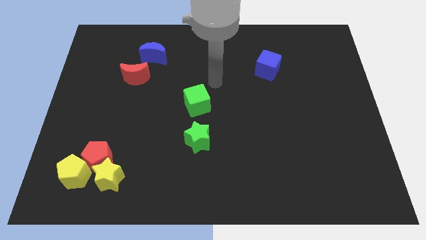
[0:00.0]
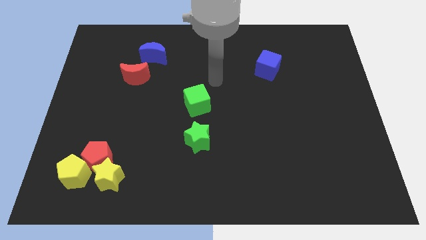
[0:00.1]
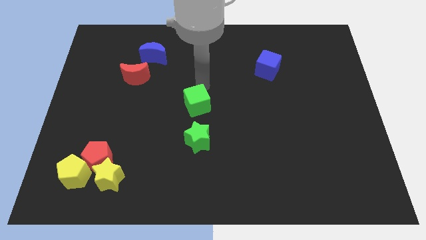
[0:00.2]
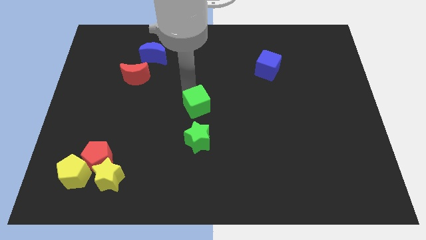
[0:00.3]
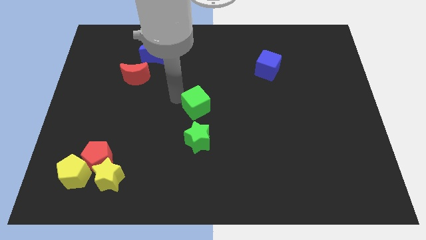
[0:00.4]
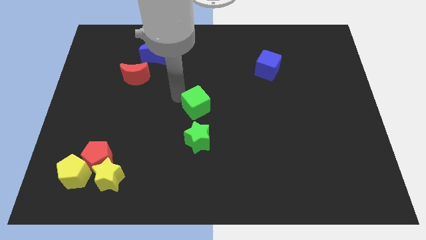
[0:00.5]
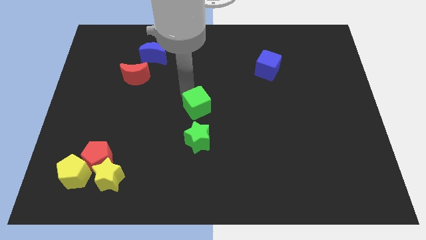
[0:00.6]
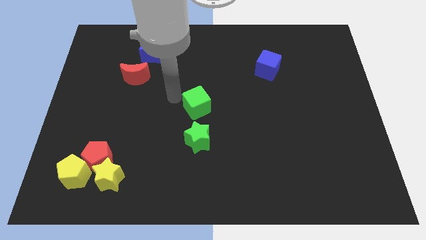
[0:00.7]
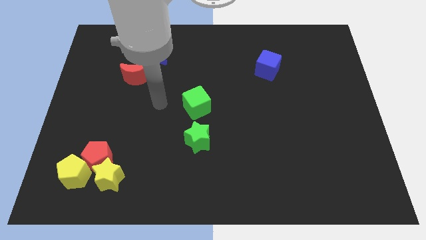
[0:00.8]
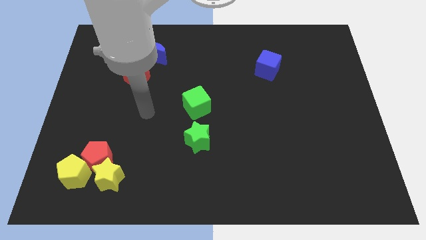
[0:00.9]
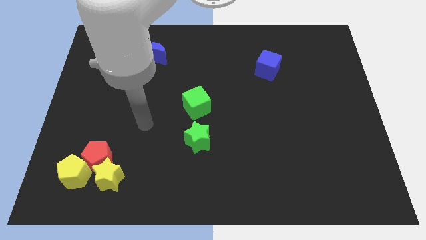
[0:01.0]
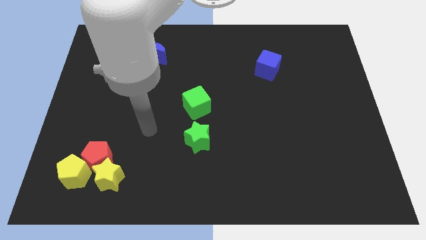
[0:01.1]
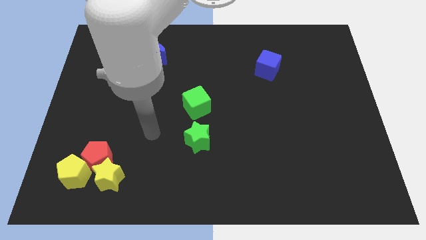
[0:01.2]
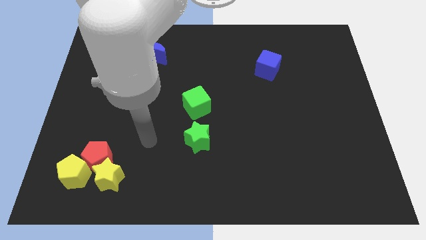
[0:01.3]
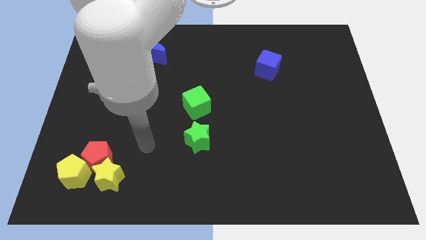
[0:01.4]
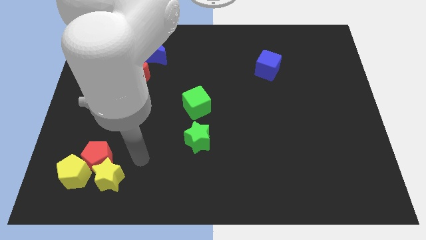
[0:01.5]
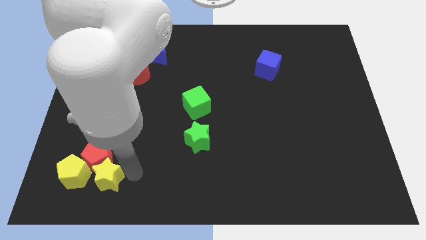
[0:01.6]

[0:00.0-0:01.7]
push the green cube downwards slightly

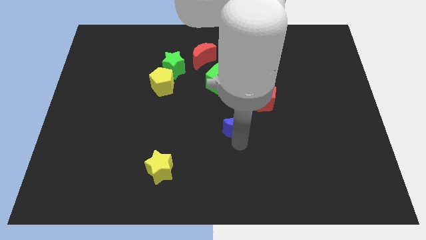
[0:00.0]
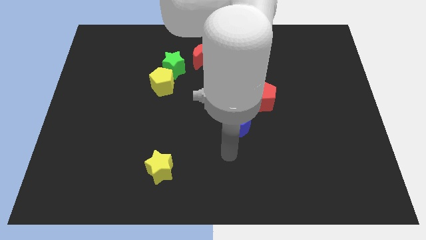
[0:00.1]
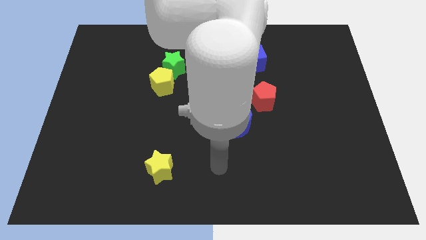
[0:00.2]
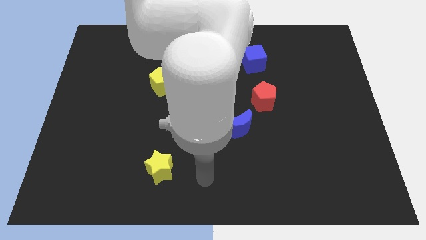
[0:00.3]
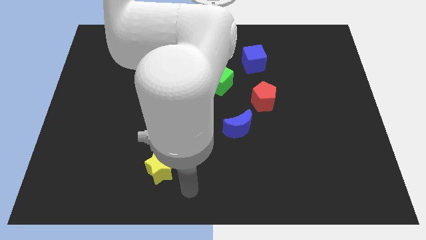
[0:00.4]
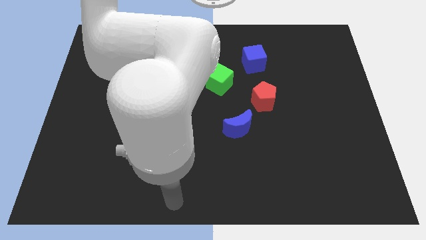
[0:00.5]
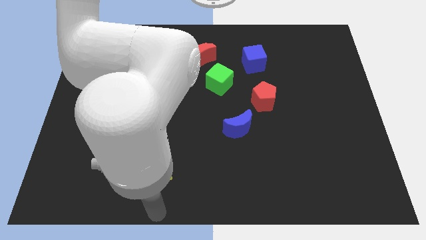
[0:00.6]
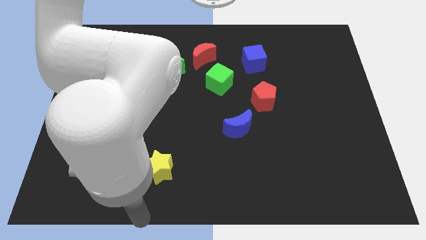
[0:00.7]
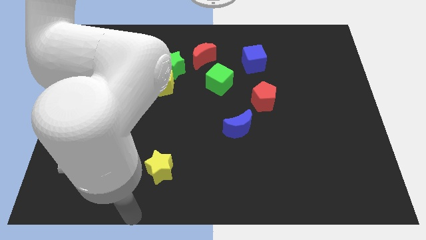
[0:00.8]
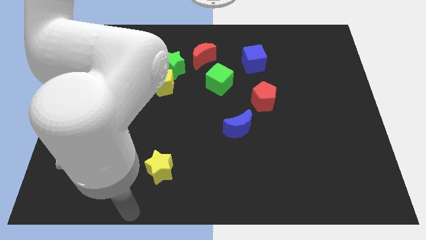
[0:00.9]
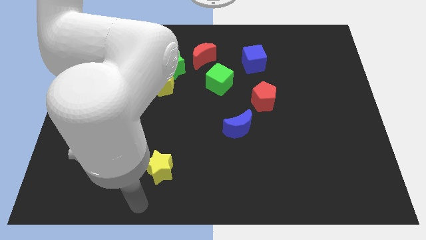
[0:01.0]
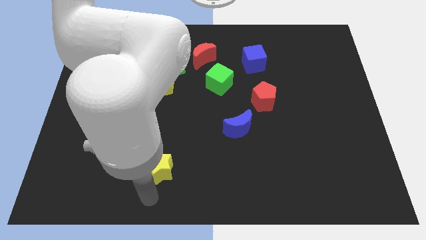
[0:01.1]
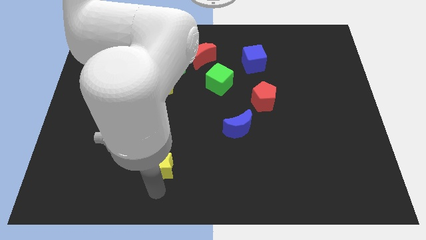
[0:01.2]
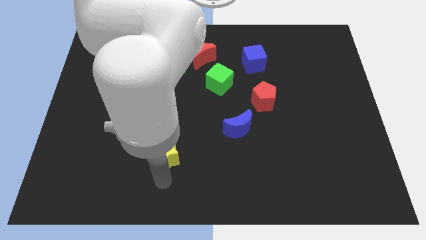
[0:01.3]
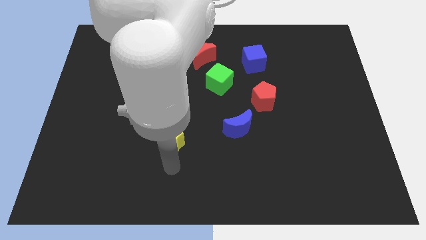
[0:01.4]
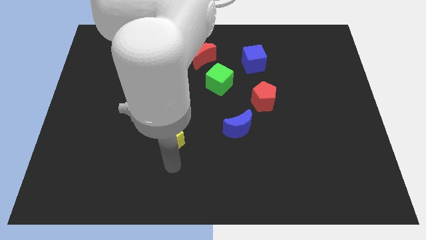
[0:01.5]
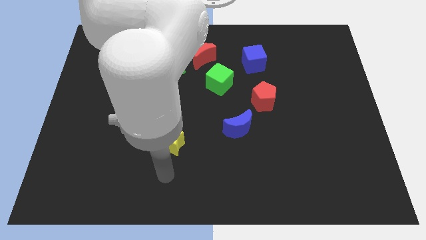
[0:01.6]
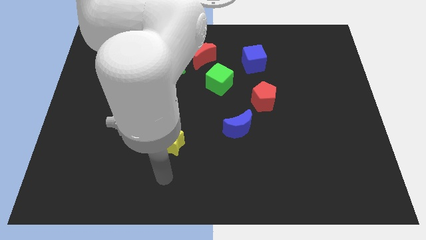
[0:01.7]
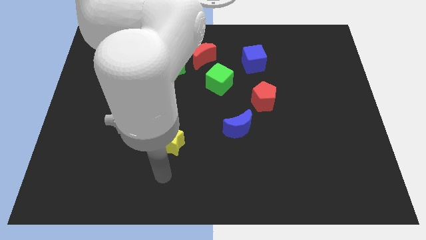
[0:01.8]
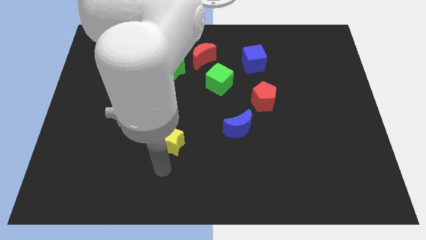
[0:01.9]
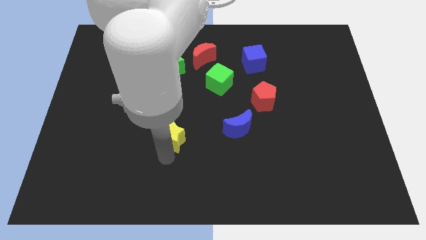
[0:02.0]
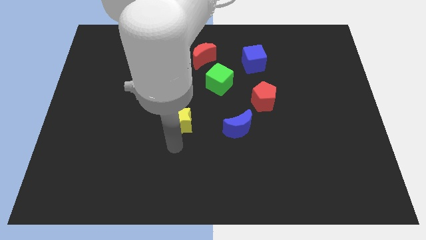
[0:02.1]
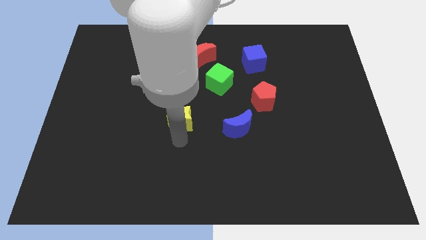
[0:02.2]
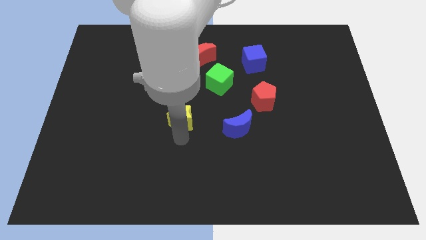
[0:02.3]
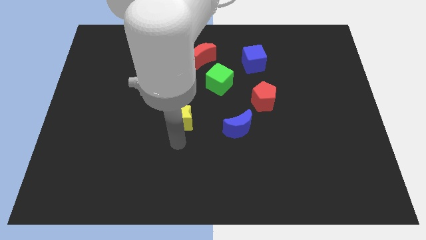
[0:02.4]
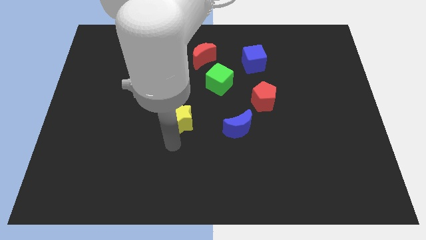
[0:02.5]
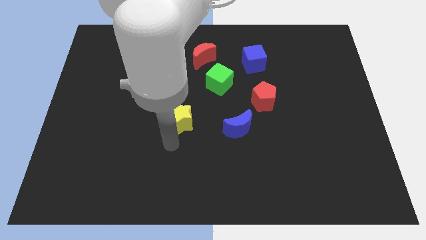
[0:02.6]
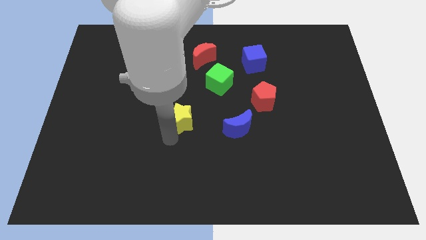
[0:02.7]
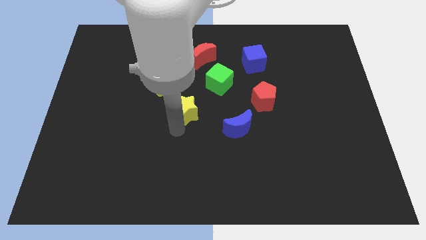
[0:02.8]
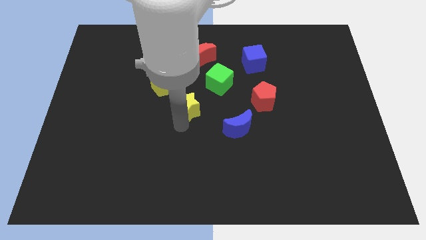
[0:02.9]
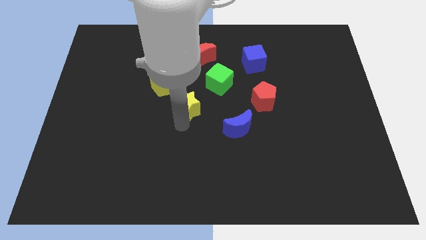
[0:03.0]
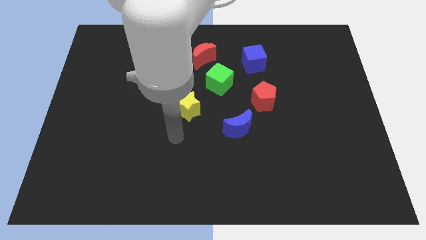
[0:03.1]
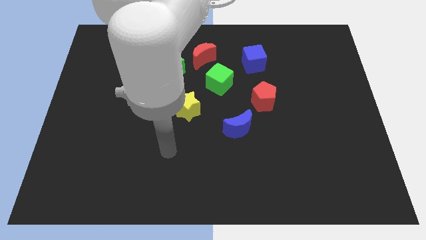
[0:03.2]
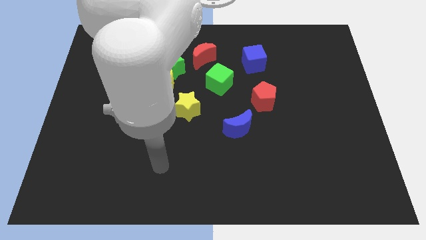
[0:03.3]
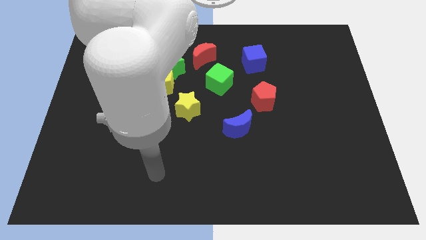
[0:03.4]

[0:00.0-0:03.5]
move yellow star near towards the green cube

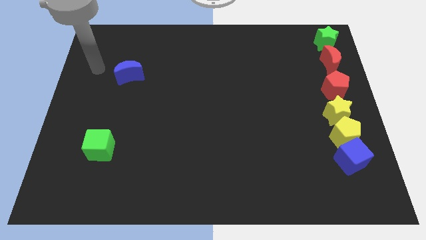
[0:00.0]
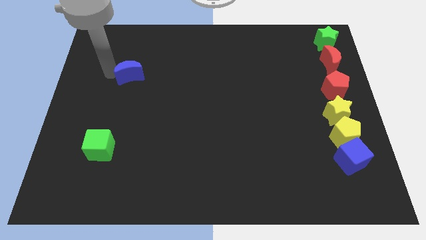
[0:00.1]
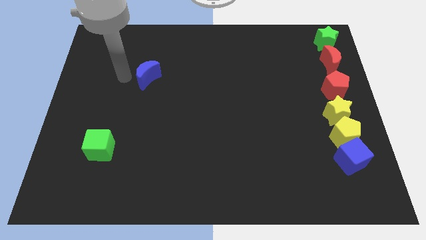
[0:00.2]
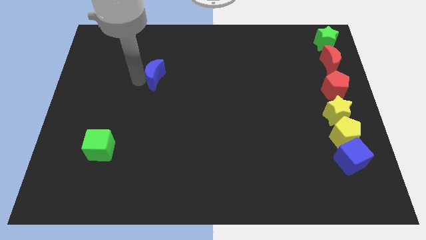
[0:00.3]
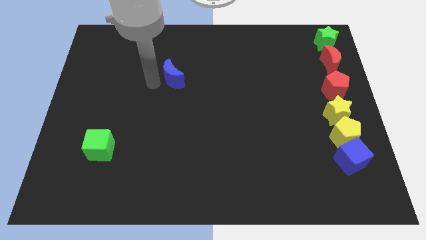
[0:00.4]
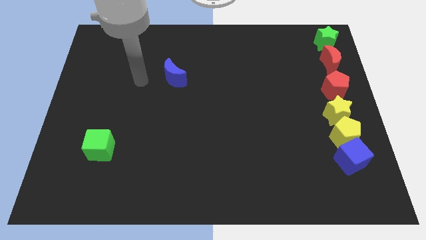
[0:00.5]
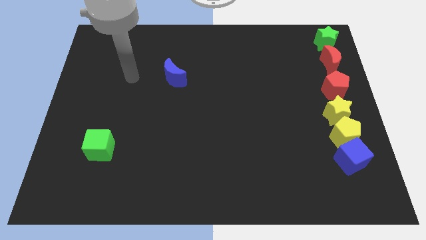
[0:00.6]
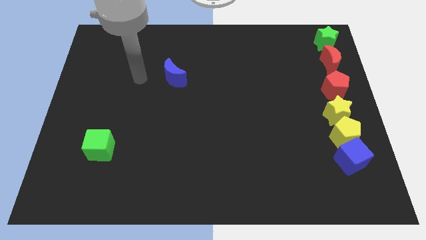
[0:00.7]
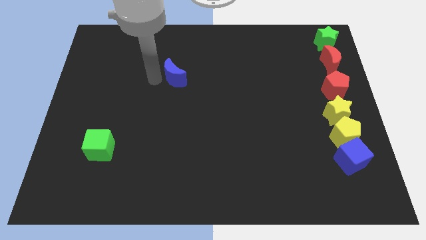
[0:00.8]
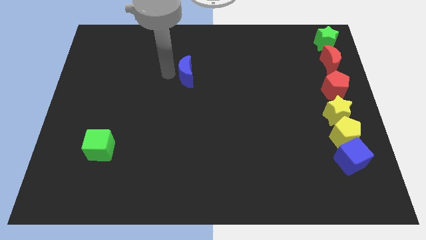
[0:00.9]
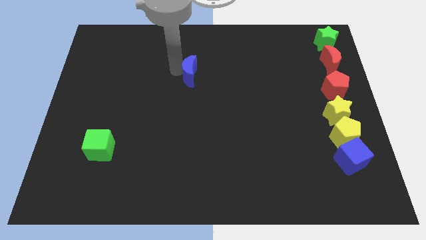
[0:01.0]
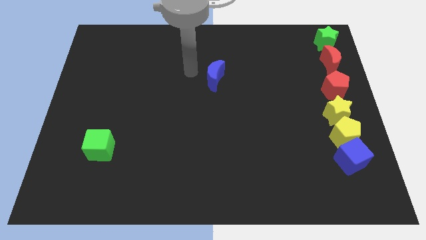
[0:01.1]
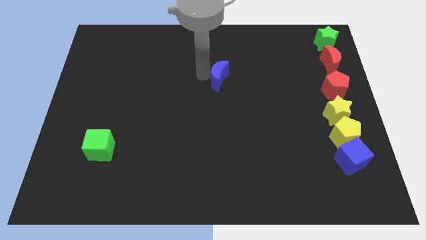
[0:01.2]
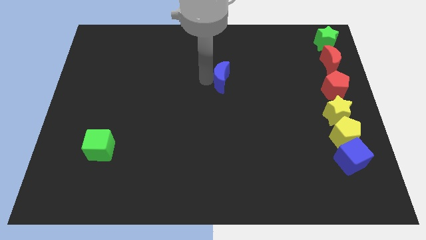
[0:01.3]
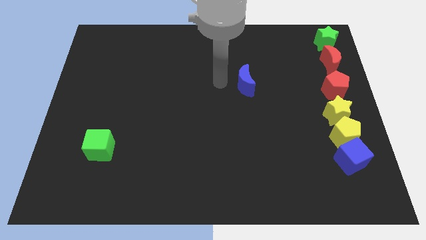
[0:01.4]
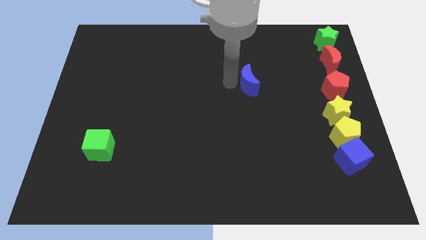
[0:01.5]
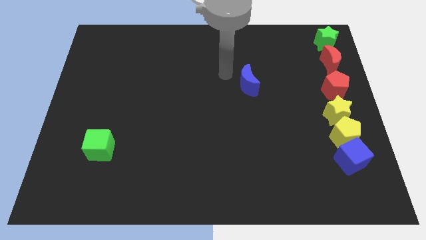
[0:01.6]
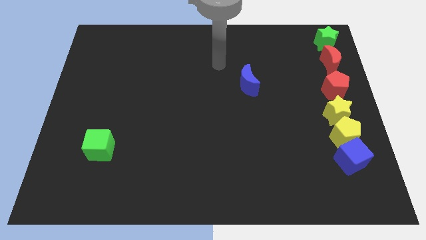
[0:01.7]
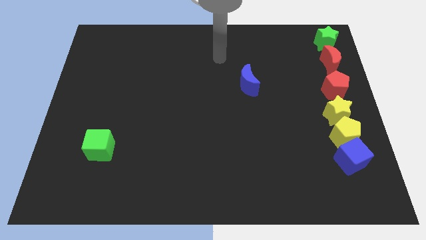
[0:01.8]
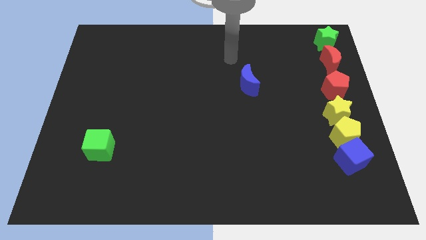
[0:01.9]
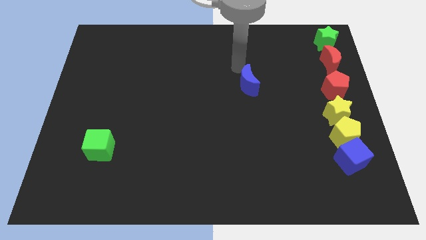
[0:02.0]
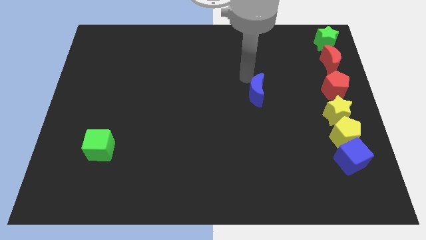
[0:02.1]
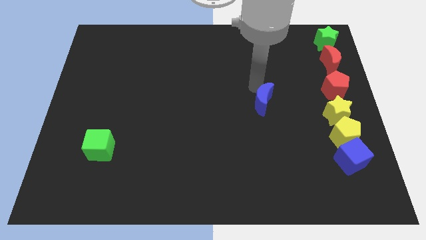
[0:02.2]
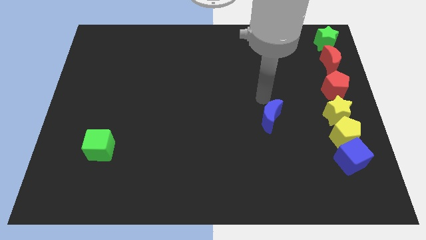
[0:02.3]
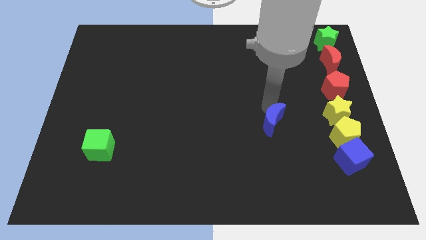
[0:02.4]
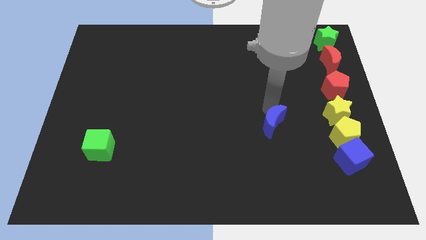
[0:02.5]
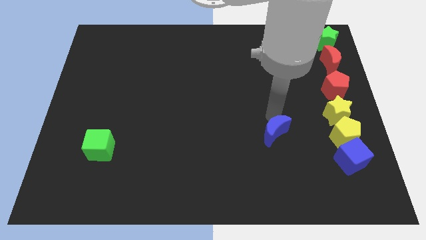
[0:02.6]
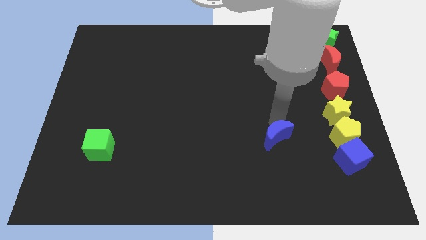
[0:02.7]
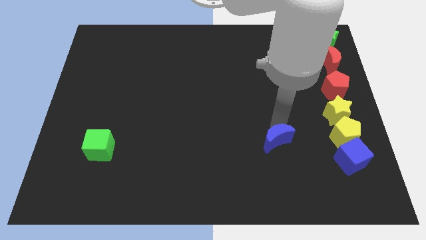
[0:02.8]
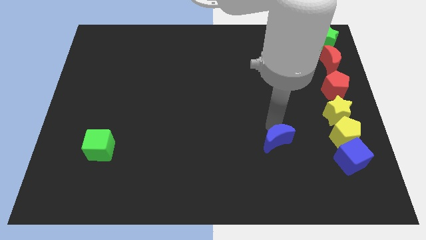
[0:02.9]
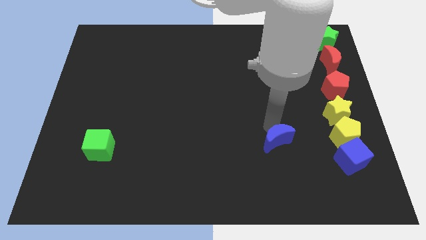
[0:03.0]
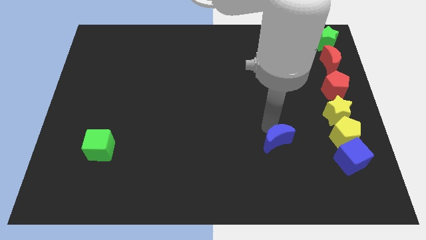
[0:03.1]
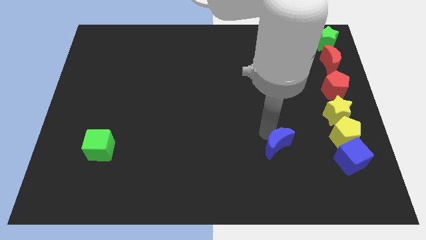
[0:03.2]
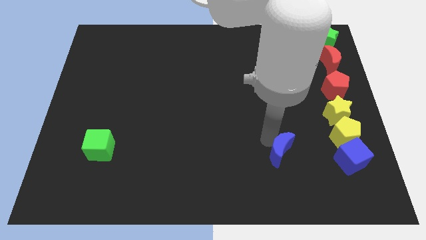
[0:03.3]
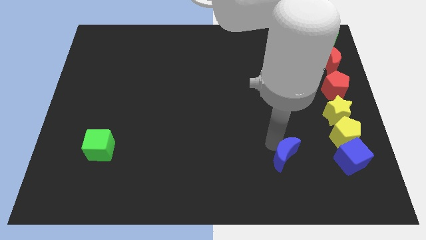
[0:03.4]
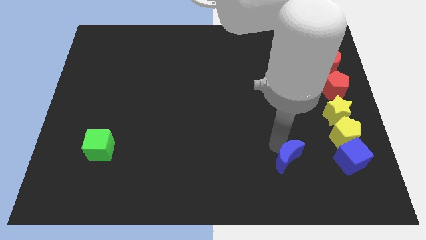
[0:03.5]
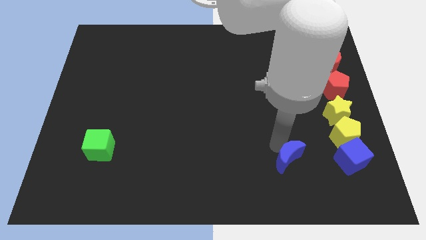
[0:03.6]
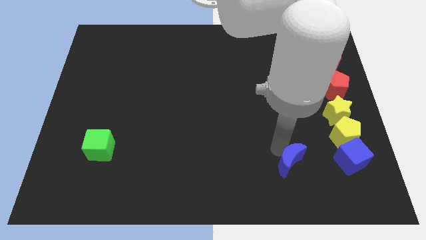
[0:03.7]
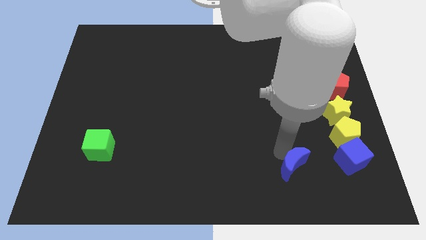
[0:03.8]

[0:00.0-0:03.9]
move the blue crescent towards the left side of the blue cube
